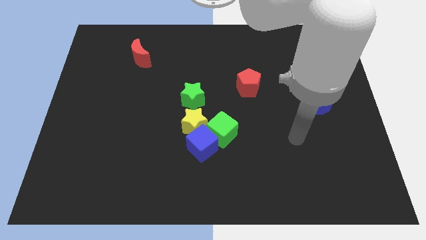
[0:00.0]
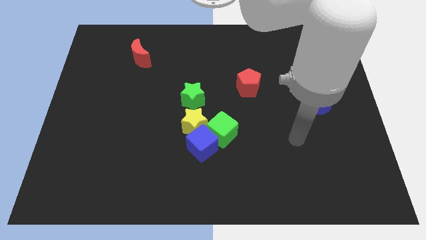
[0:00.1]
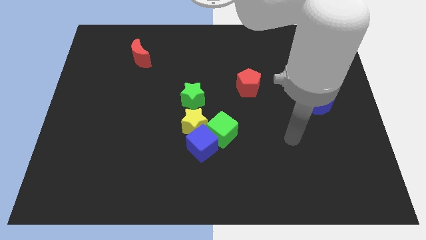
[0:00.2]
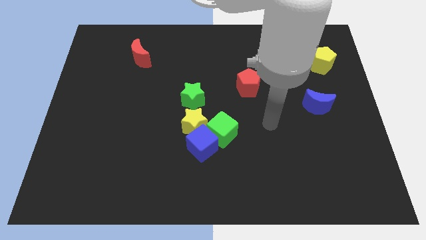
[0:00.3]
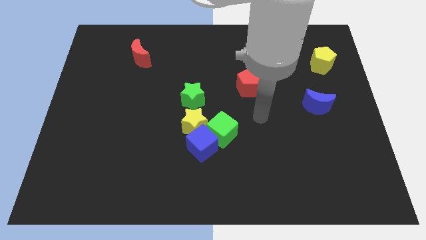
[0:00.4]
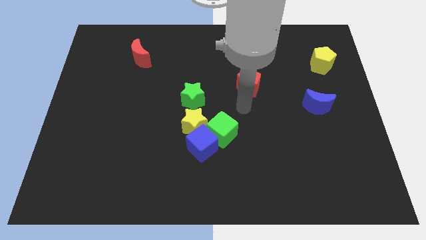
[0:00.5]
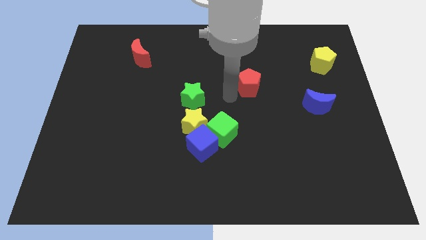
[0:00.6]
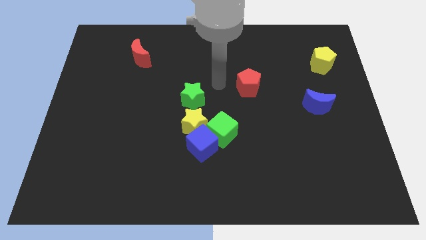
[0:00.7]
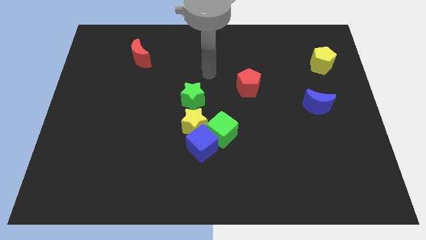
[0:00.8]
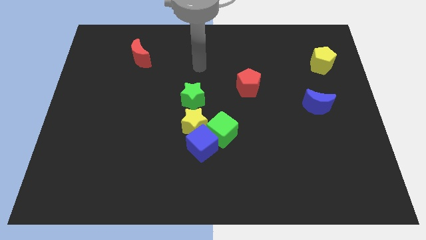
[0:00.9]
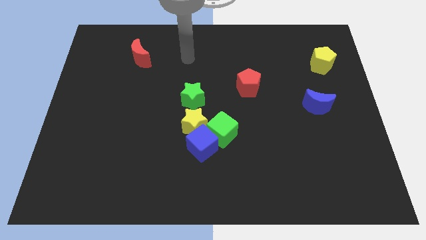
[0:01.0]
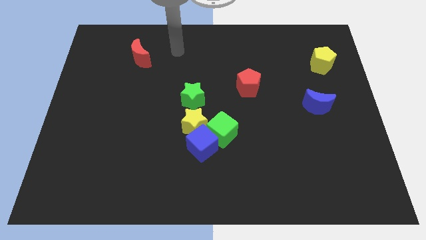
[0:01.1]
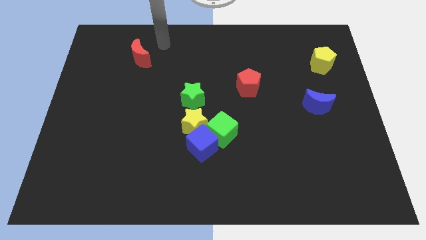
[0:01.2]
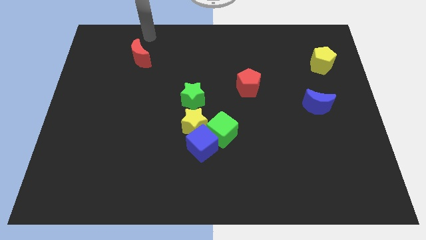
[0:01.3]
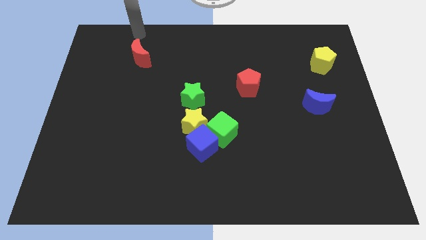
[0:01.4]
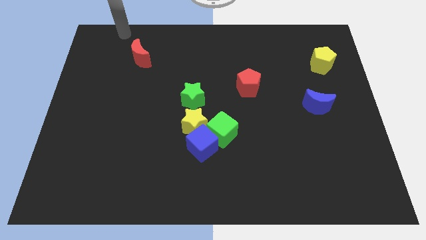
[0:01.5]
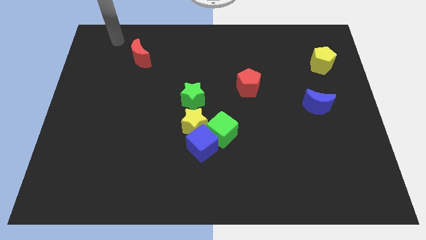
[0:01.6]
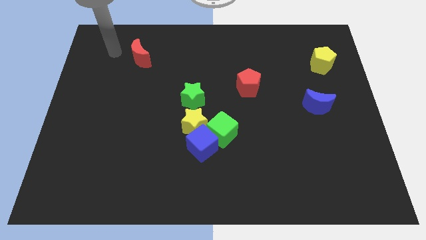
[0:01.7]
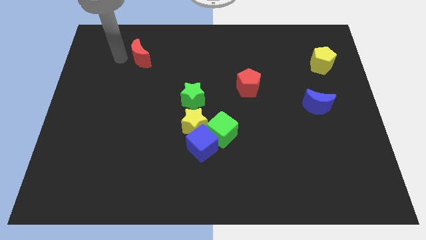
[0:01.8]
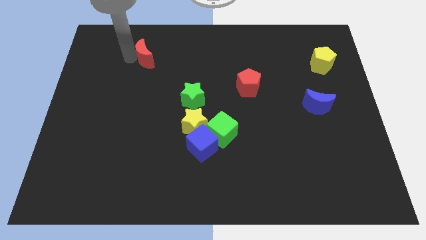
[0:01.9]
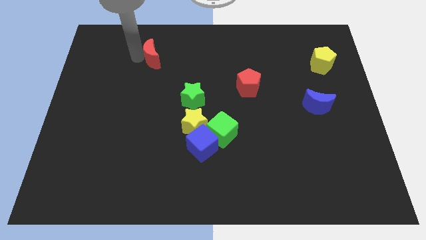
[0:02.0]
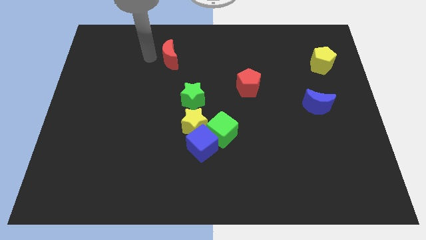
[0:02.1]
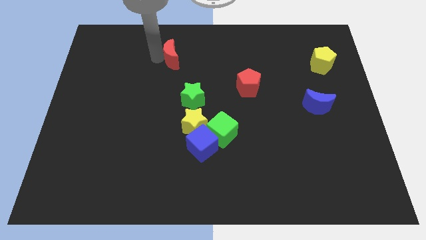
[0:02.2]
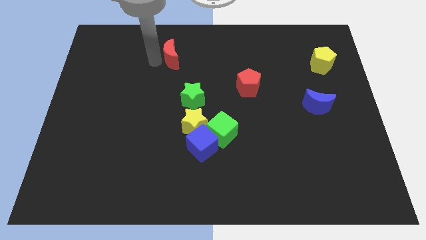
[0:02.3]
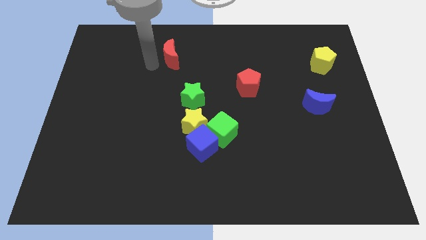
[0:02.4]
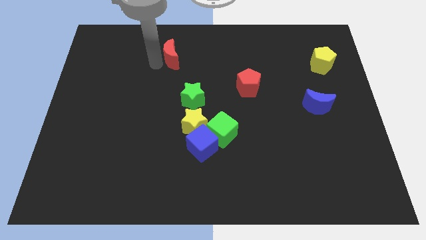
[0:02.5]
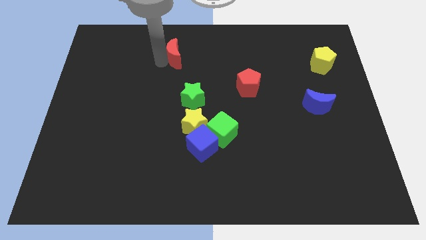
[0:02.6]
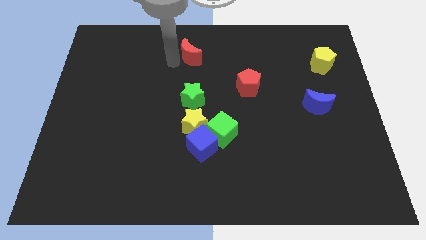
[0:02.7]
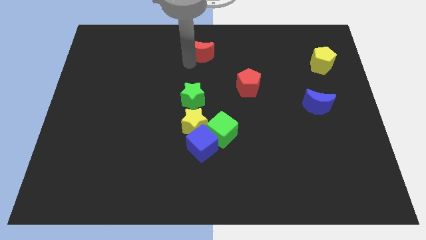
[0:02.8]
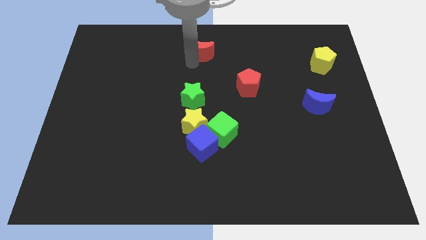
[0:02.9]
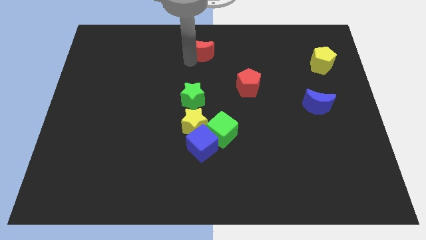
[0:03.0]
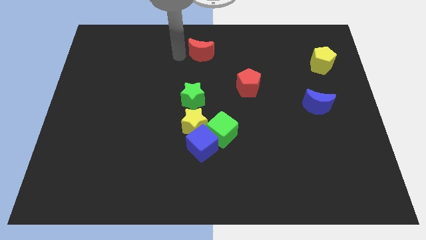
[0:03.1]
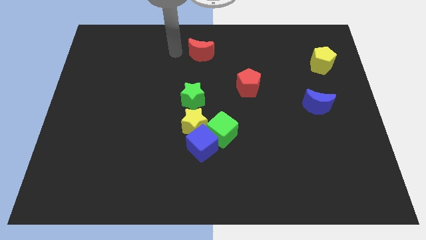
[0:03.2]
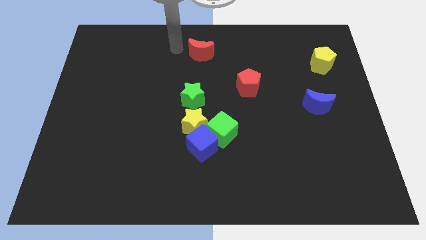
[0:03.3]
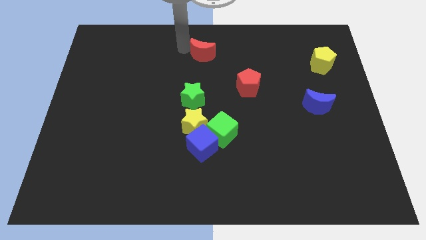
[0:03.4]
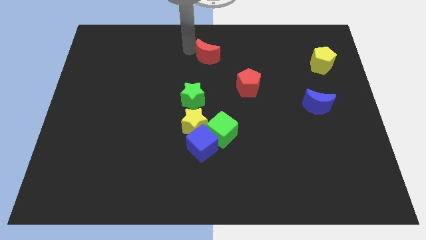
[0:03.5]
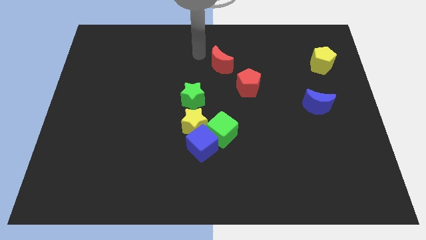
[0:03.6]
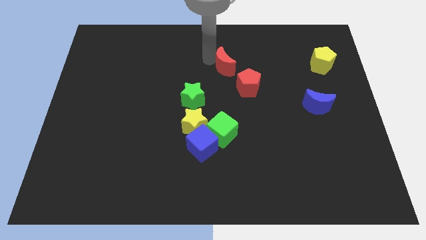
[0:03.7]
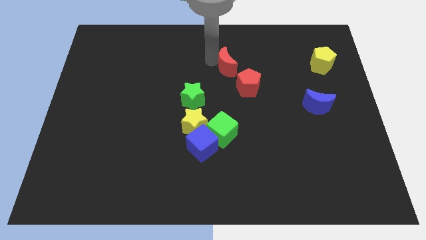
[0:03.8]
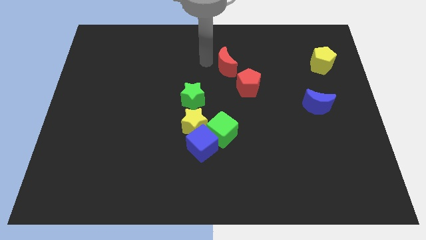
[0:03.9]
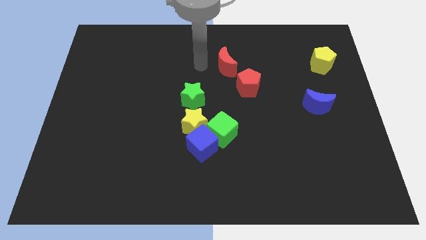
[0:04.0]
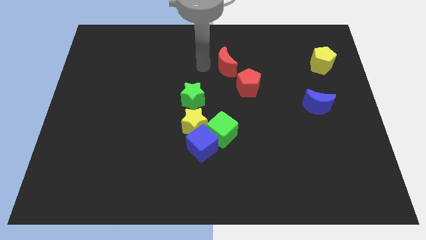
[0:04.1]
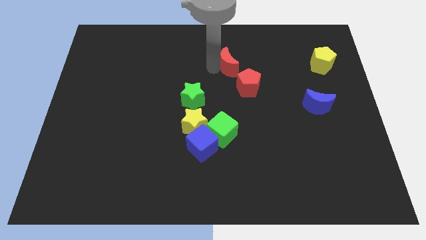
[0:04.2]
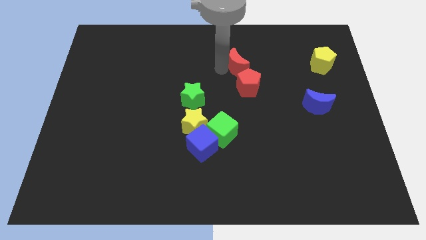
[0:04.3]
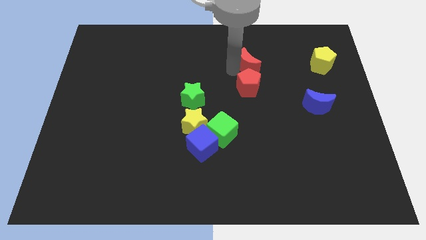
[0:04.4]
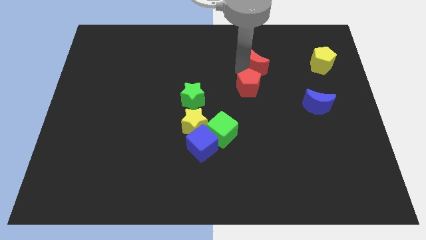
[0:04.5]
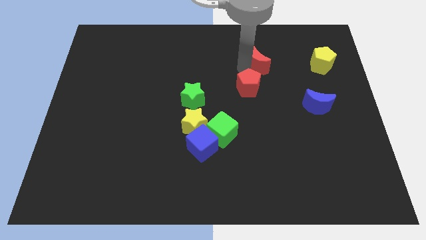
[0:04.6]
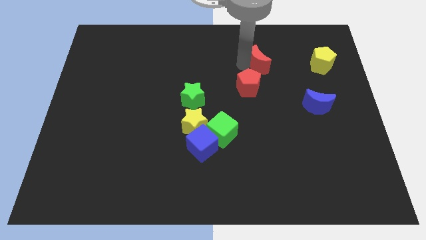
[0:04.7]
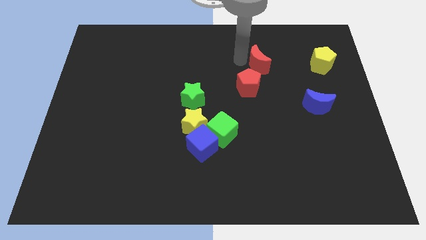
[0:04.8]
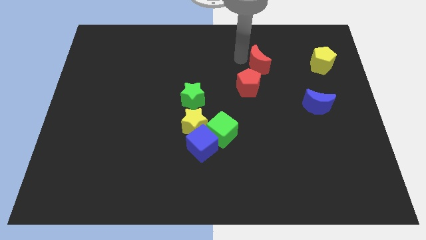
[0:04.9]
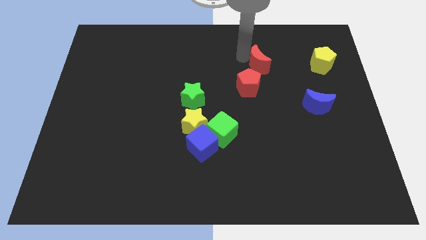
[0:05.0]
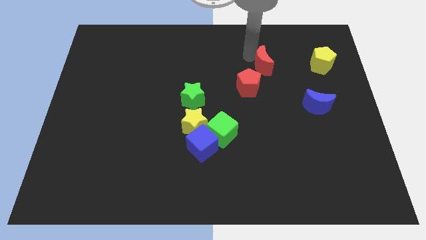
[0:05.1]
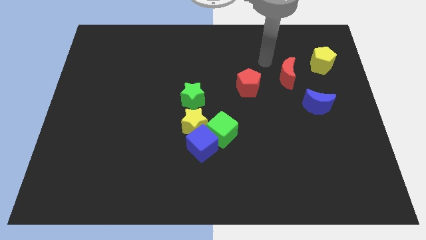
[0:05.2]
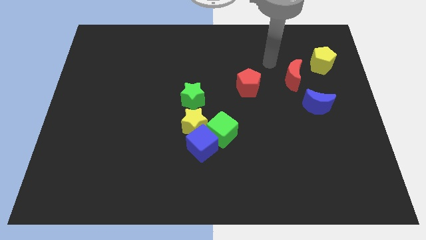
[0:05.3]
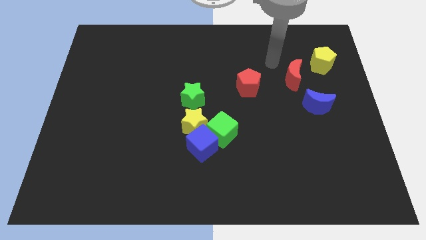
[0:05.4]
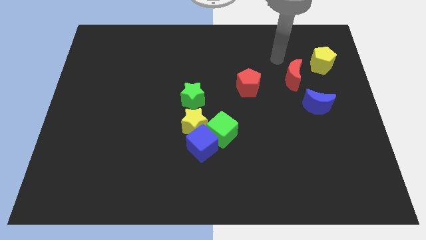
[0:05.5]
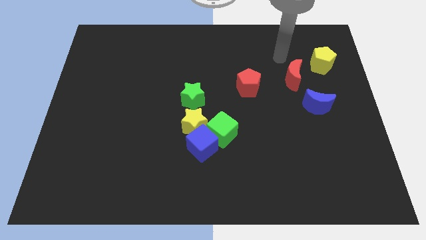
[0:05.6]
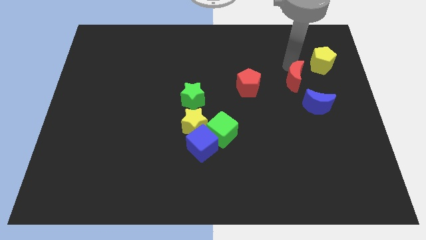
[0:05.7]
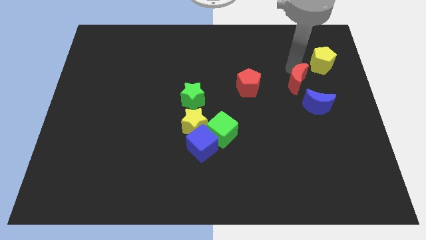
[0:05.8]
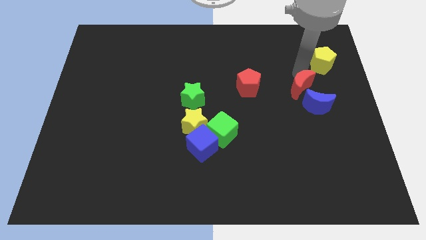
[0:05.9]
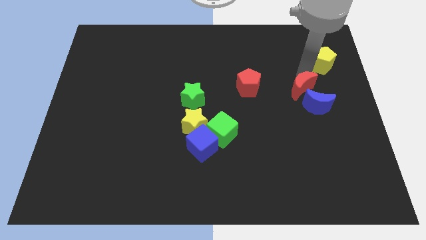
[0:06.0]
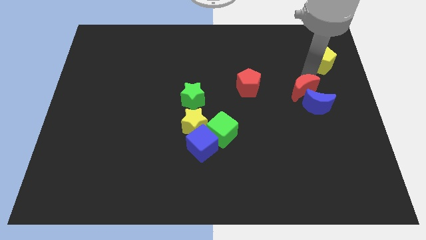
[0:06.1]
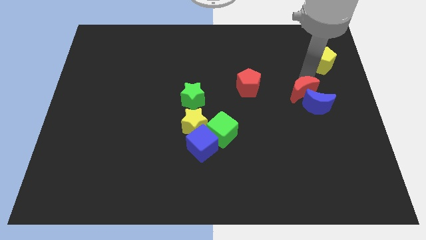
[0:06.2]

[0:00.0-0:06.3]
move the red moon close to the blue moon

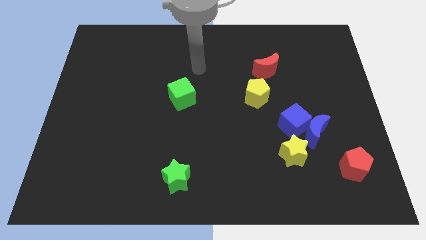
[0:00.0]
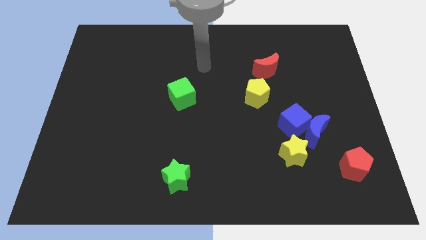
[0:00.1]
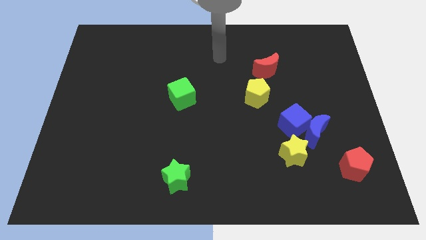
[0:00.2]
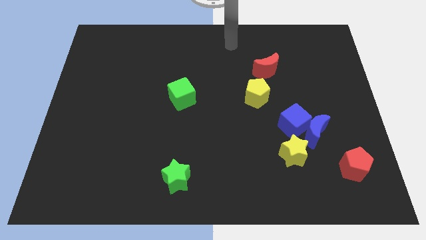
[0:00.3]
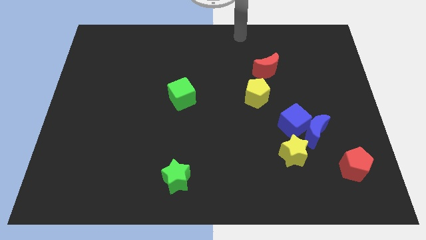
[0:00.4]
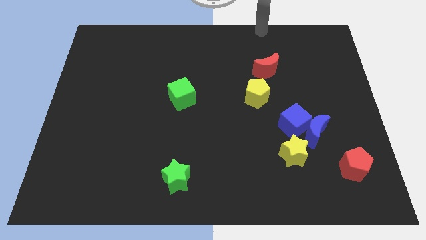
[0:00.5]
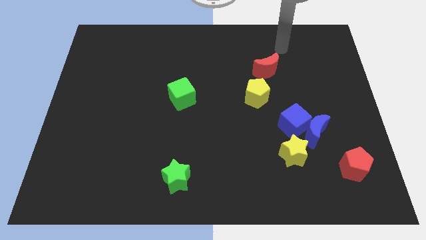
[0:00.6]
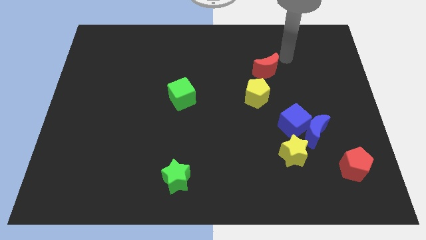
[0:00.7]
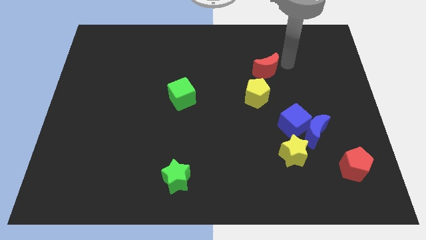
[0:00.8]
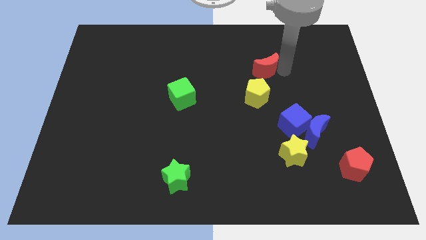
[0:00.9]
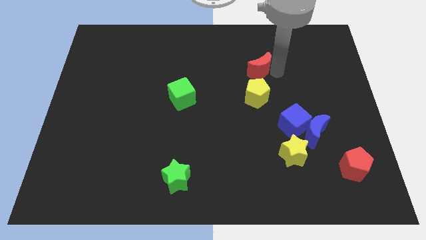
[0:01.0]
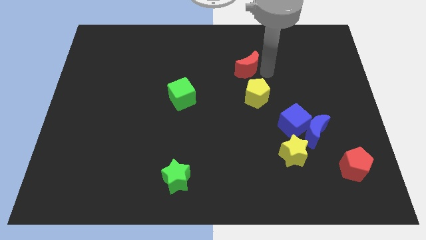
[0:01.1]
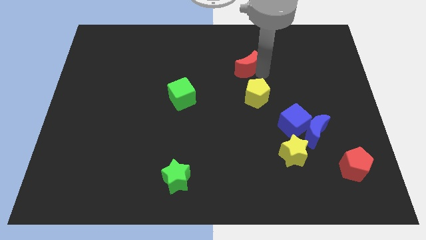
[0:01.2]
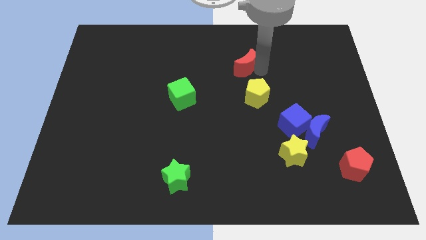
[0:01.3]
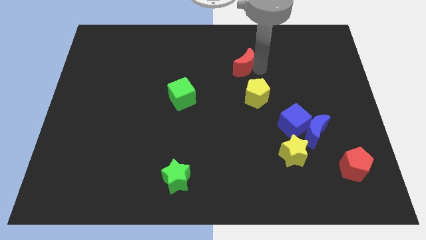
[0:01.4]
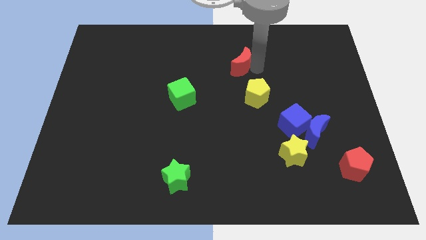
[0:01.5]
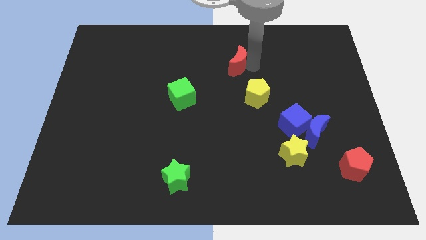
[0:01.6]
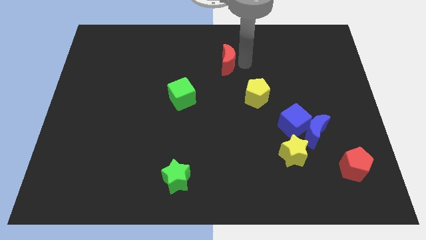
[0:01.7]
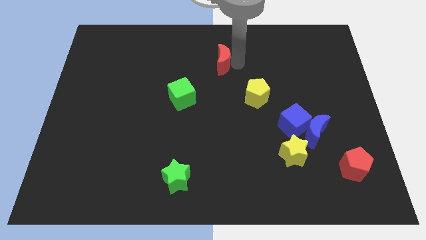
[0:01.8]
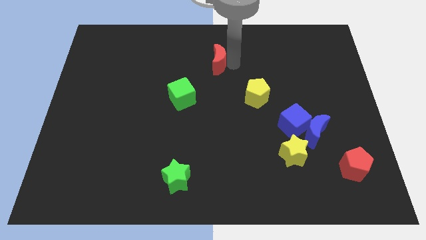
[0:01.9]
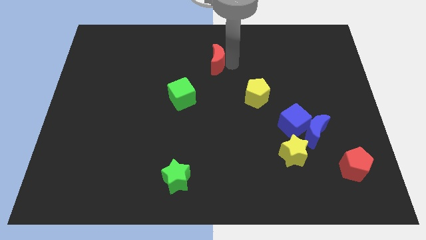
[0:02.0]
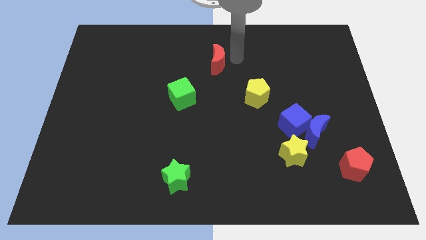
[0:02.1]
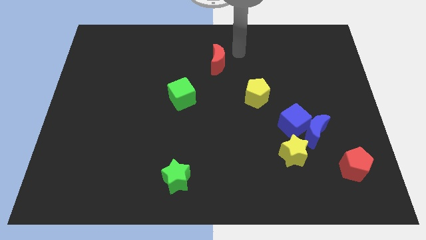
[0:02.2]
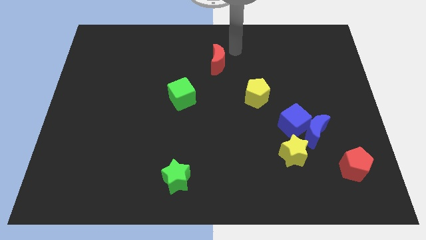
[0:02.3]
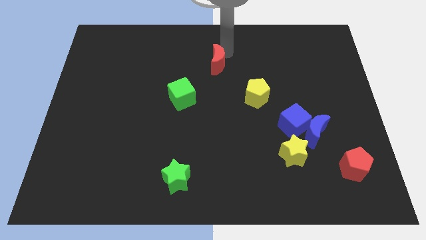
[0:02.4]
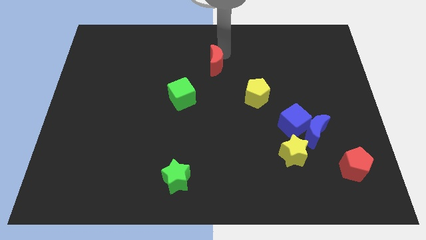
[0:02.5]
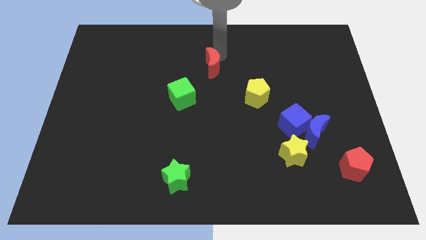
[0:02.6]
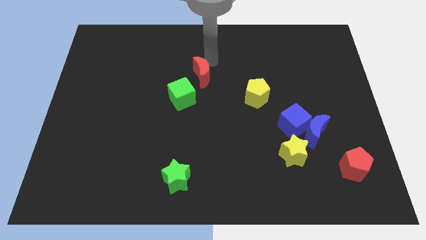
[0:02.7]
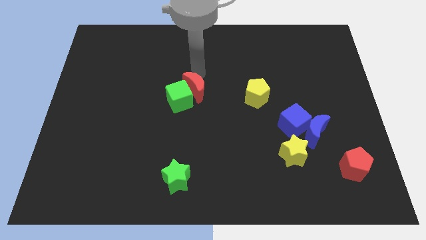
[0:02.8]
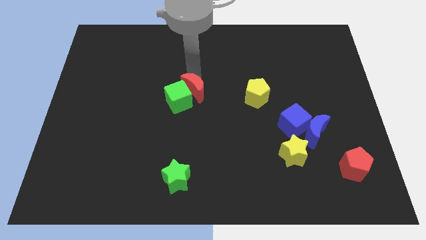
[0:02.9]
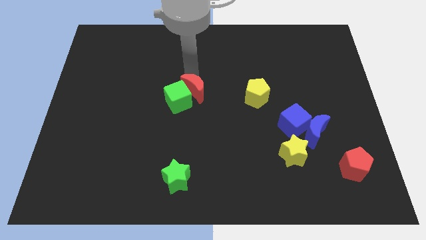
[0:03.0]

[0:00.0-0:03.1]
slide the red moon next to the green cube
